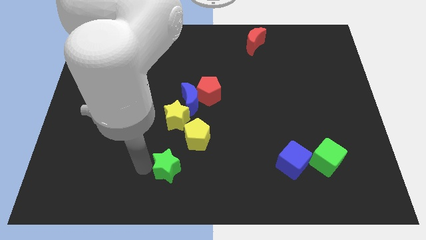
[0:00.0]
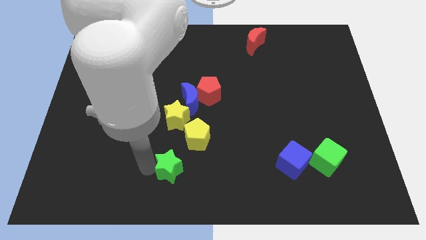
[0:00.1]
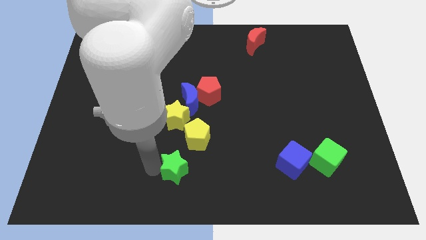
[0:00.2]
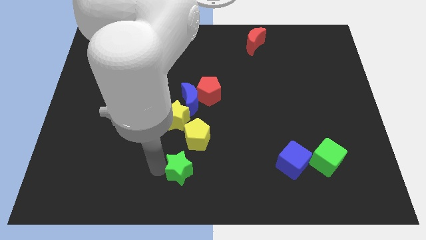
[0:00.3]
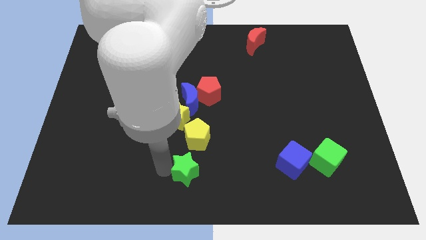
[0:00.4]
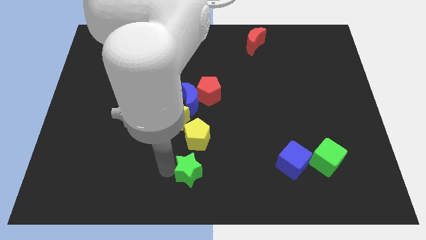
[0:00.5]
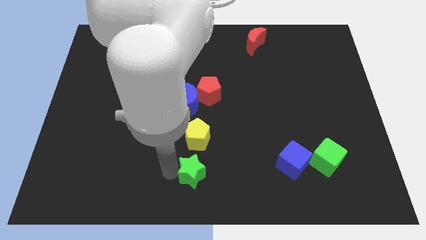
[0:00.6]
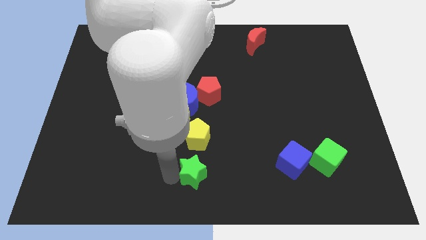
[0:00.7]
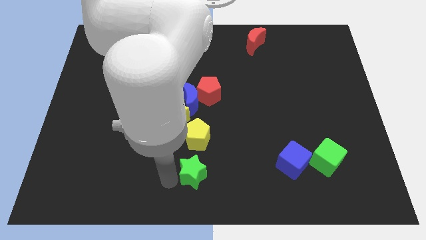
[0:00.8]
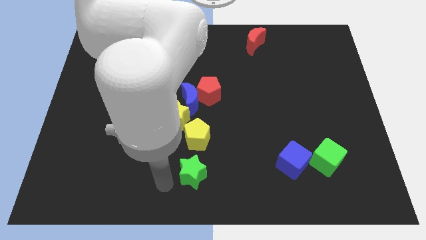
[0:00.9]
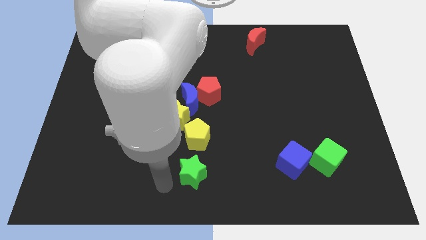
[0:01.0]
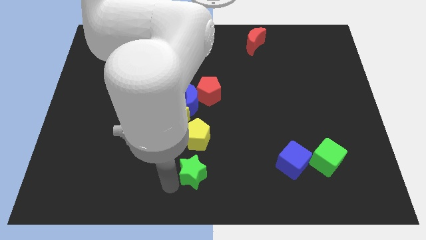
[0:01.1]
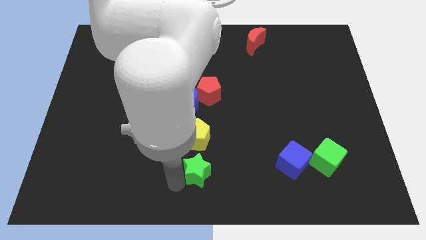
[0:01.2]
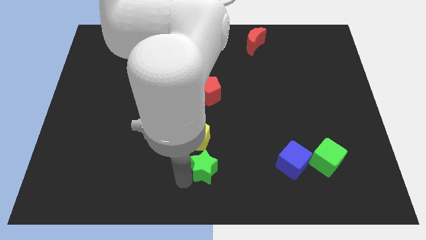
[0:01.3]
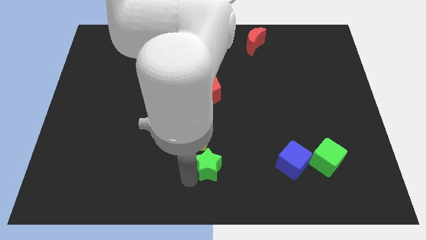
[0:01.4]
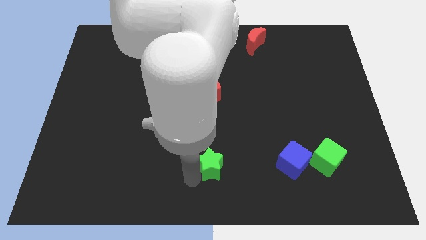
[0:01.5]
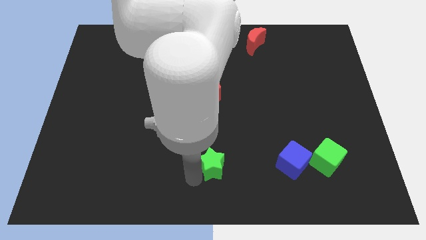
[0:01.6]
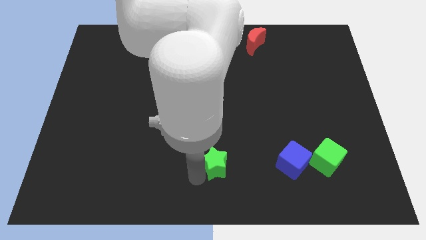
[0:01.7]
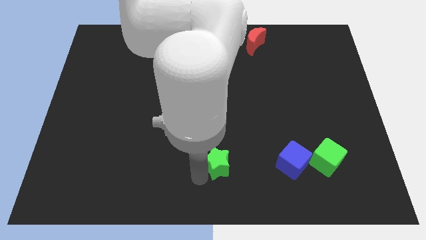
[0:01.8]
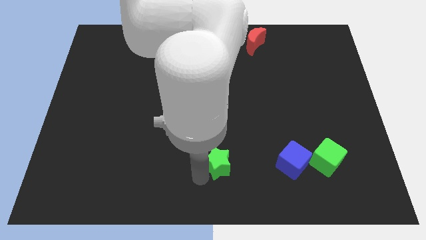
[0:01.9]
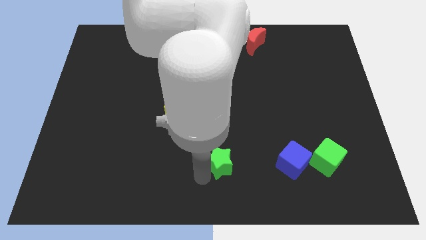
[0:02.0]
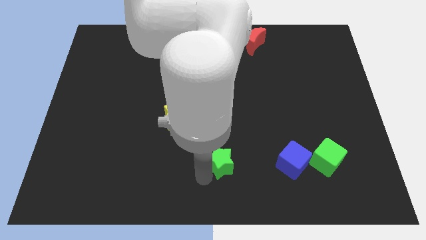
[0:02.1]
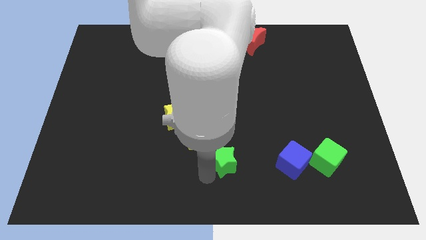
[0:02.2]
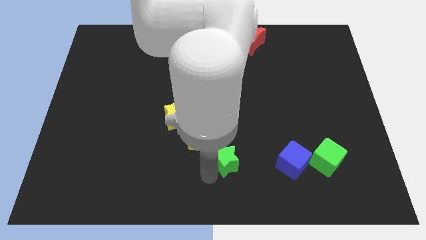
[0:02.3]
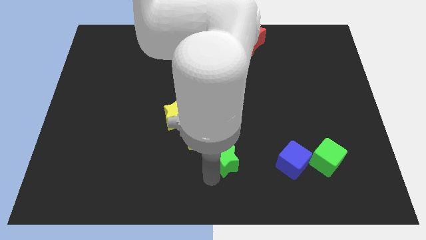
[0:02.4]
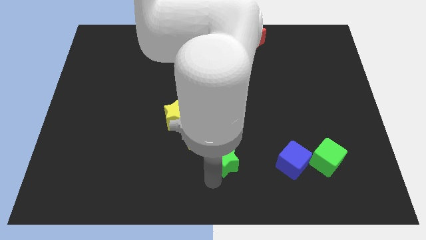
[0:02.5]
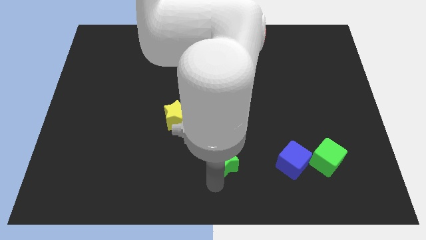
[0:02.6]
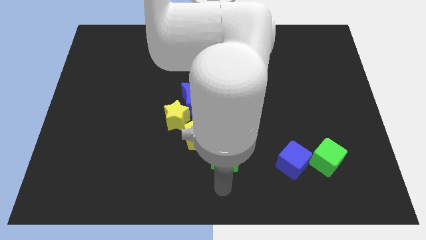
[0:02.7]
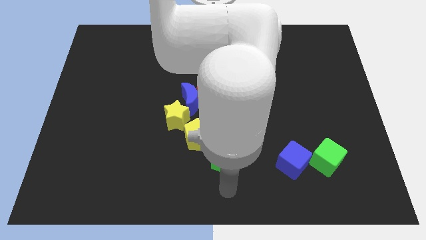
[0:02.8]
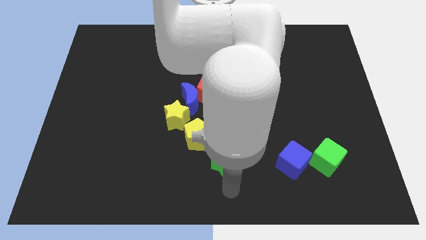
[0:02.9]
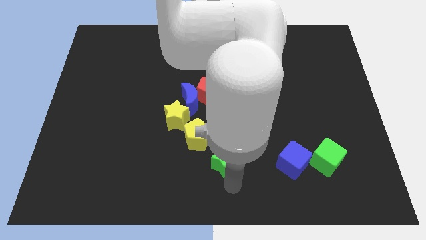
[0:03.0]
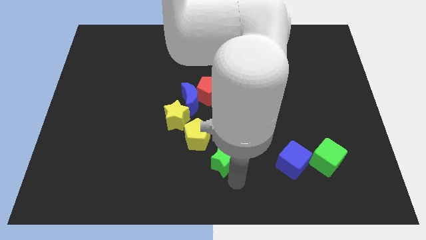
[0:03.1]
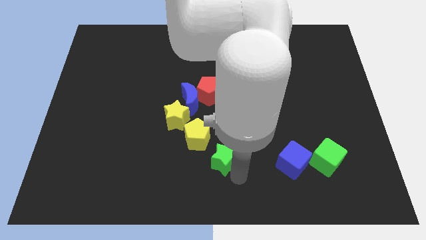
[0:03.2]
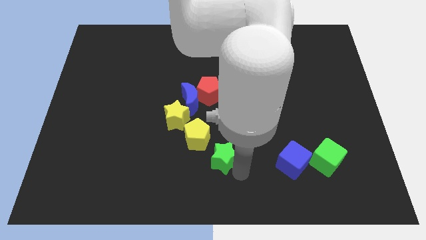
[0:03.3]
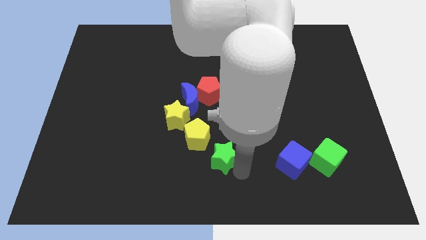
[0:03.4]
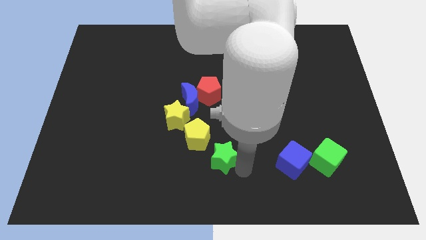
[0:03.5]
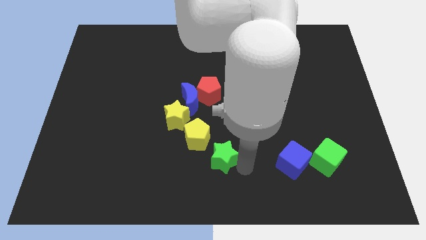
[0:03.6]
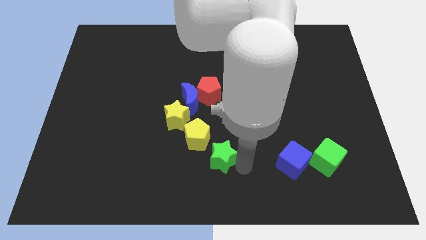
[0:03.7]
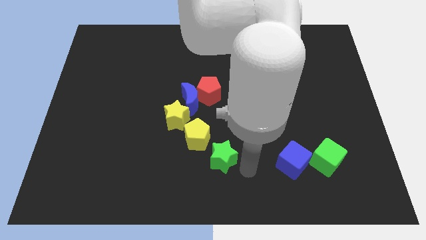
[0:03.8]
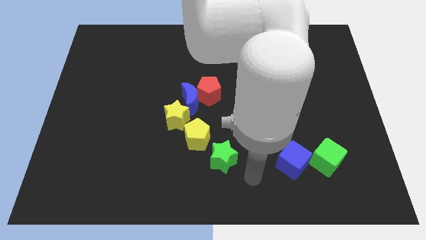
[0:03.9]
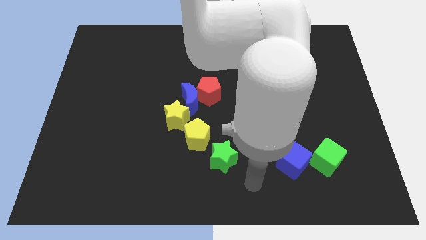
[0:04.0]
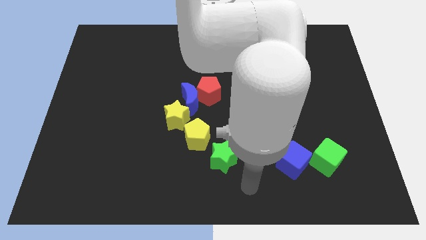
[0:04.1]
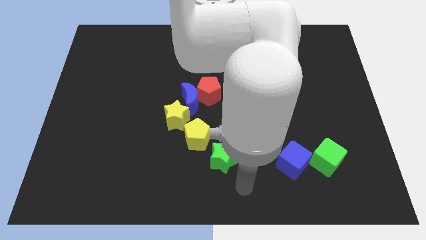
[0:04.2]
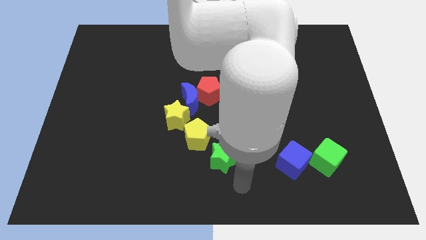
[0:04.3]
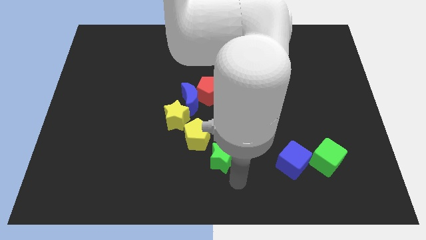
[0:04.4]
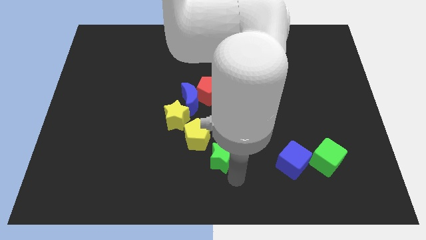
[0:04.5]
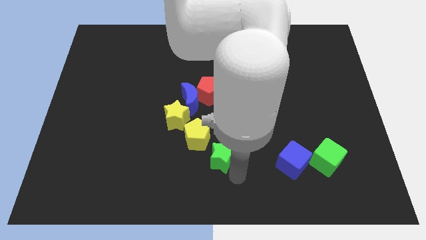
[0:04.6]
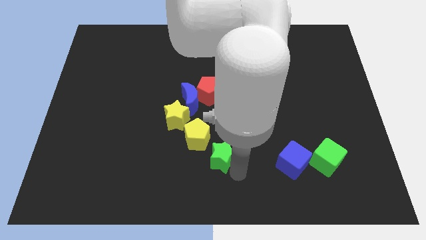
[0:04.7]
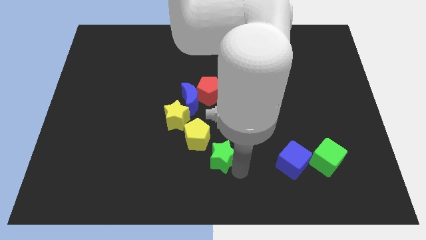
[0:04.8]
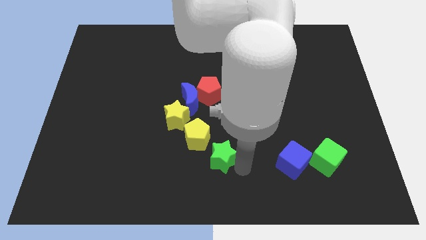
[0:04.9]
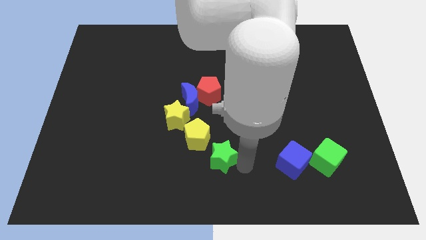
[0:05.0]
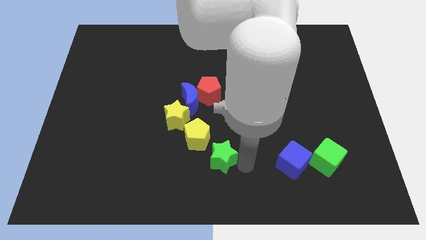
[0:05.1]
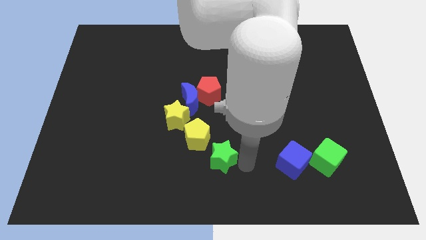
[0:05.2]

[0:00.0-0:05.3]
move the green star diagonal to the left of the blue cube

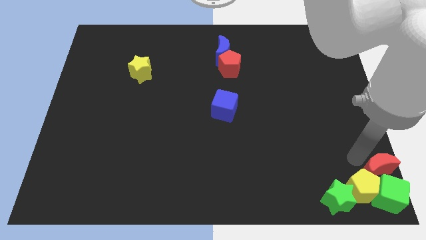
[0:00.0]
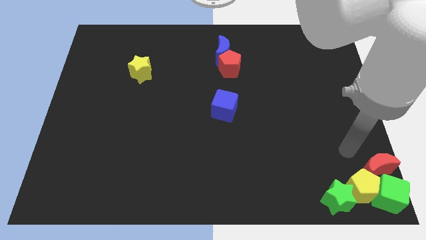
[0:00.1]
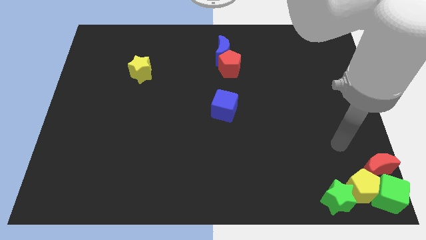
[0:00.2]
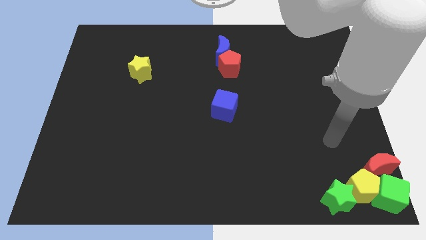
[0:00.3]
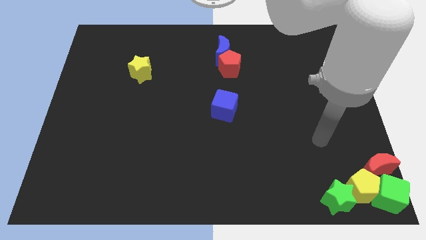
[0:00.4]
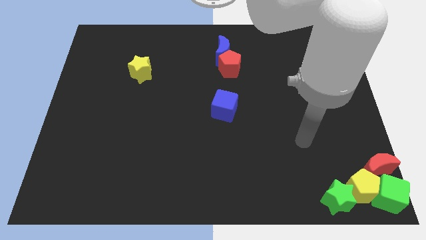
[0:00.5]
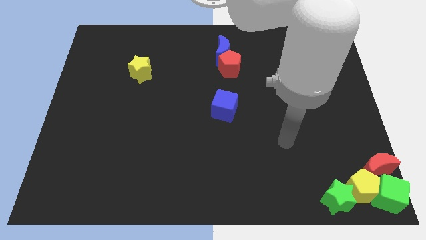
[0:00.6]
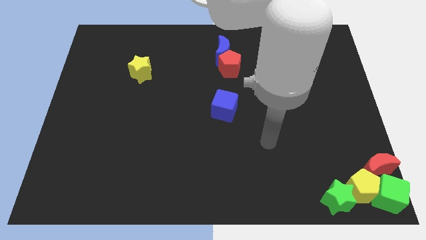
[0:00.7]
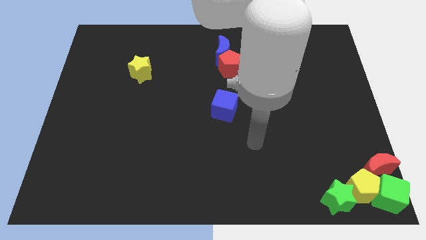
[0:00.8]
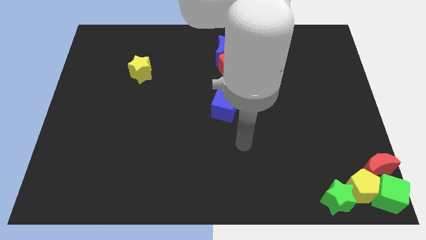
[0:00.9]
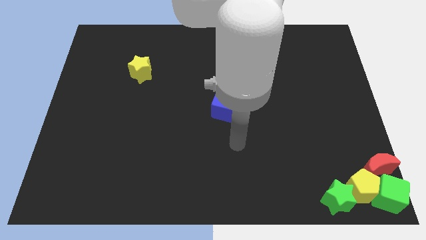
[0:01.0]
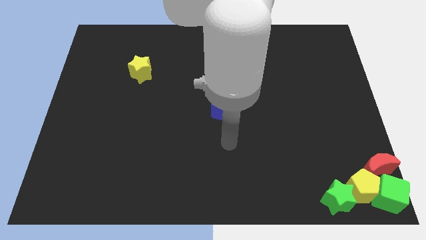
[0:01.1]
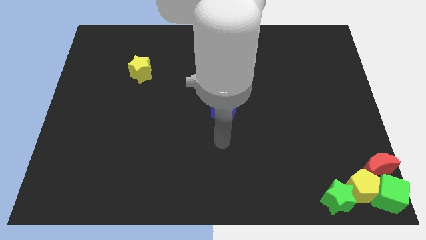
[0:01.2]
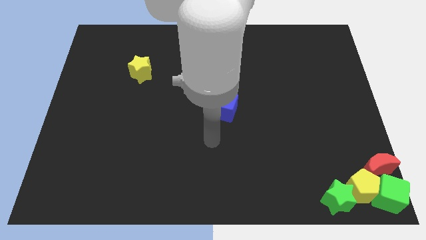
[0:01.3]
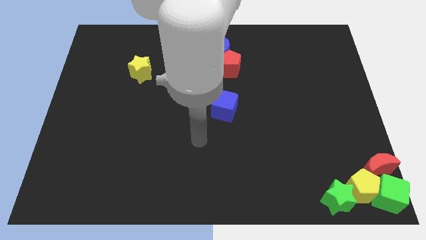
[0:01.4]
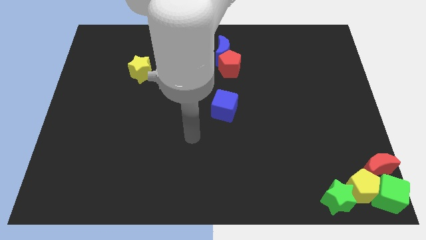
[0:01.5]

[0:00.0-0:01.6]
go away from the red moon

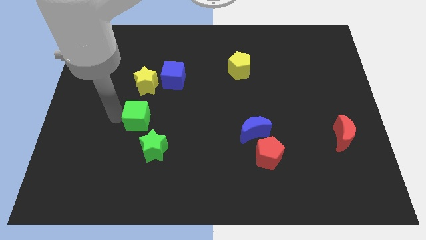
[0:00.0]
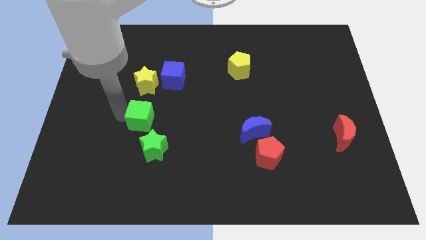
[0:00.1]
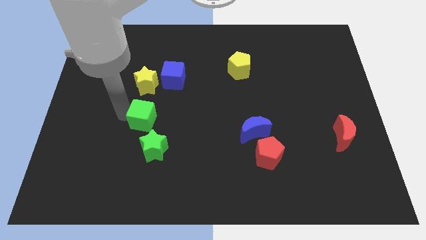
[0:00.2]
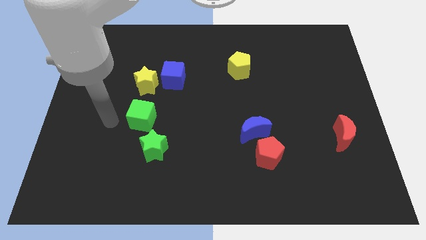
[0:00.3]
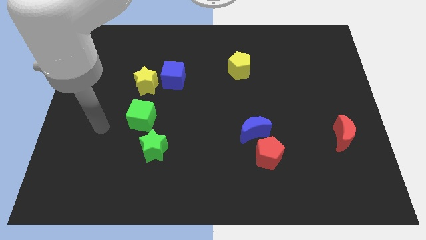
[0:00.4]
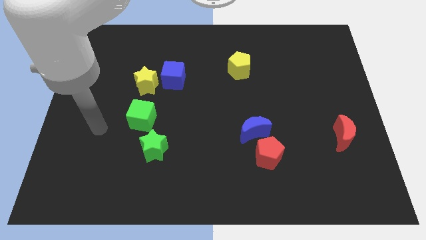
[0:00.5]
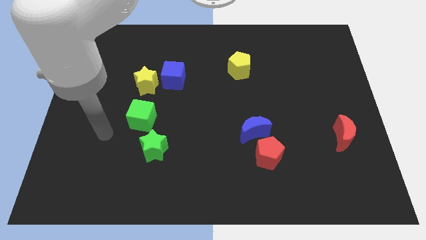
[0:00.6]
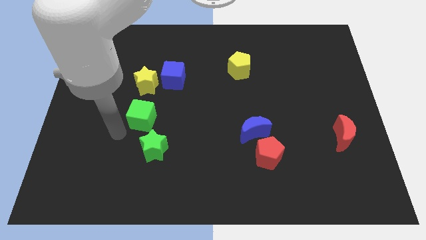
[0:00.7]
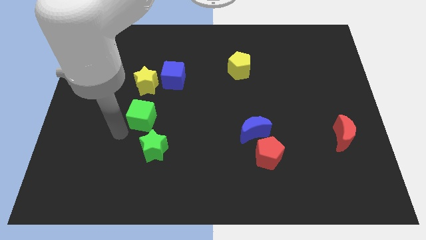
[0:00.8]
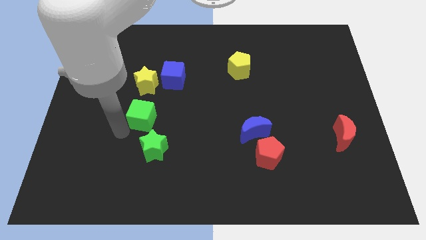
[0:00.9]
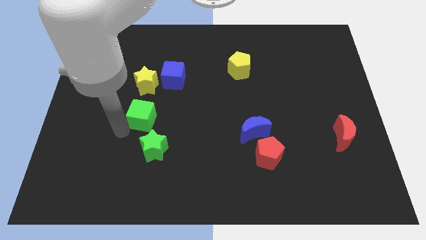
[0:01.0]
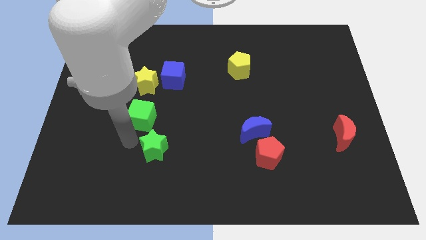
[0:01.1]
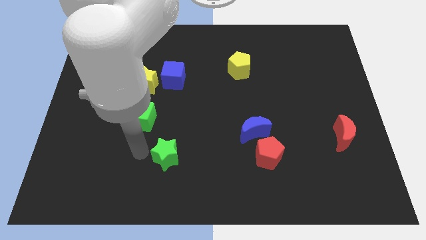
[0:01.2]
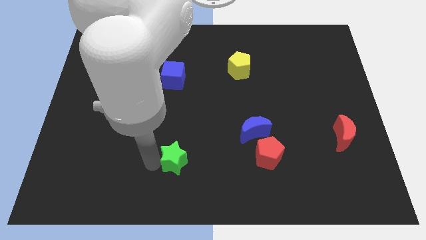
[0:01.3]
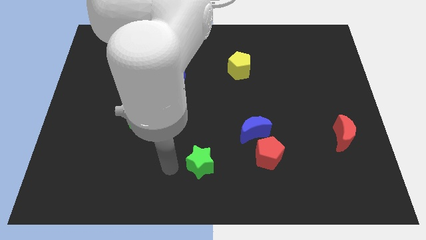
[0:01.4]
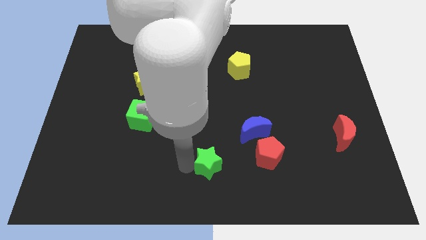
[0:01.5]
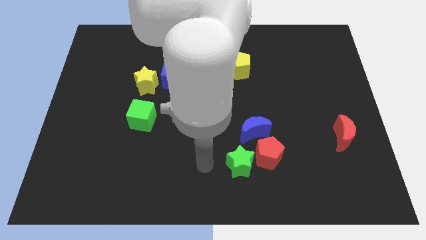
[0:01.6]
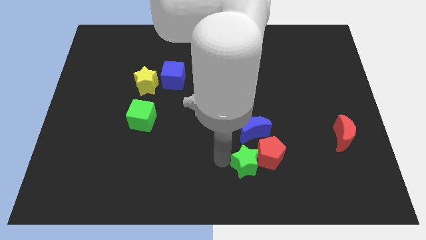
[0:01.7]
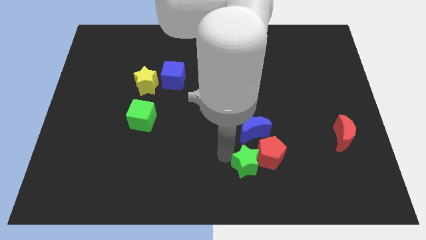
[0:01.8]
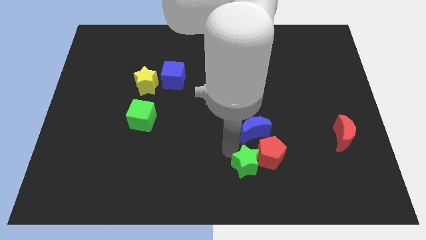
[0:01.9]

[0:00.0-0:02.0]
move the green star into the red pentagon
